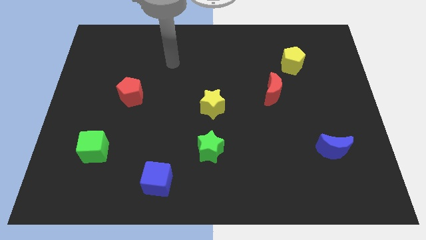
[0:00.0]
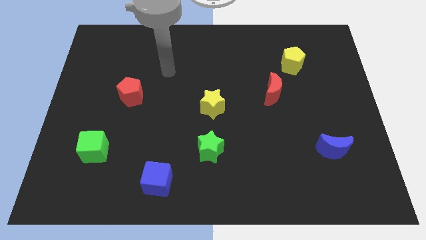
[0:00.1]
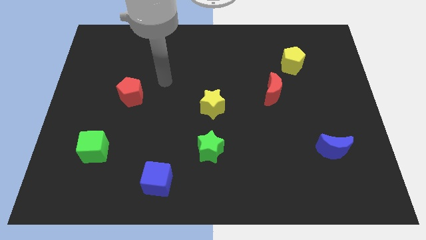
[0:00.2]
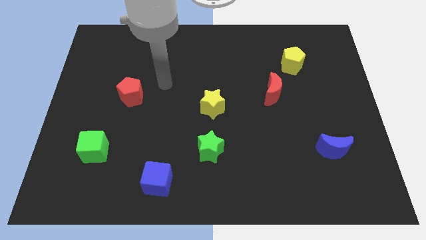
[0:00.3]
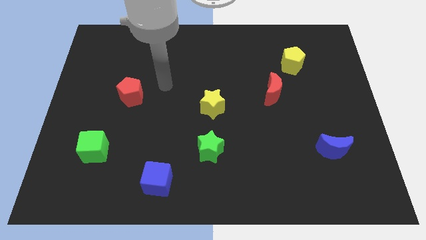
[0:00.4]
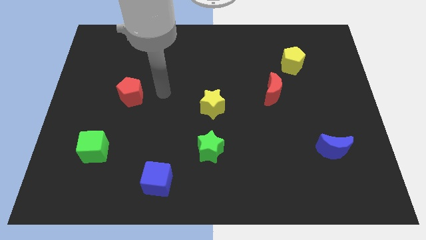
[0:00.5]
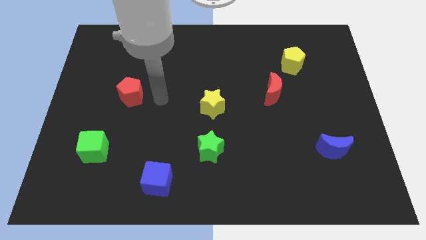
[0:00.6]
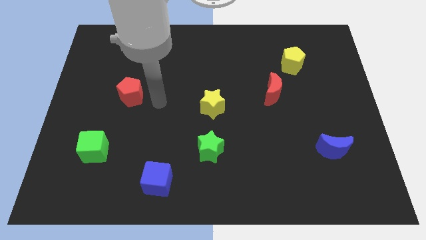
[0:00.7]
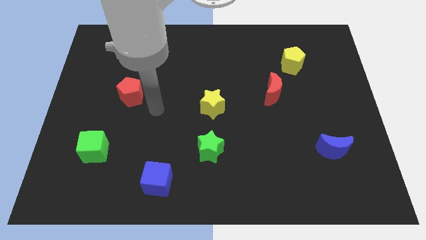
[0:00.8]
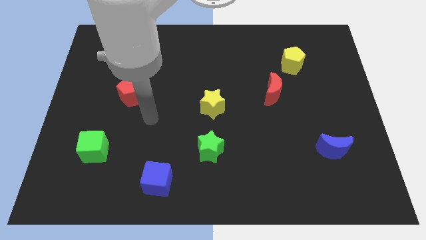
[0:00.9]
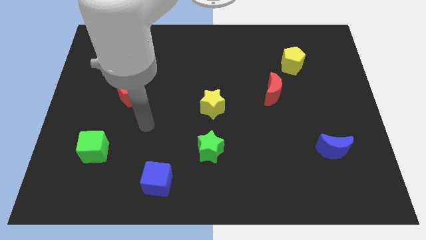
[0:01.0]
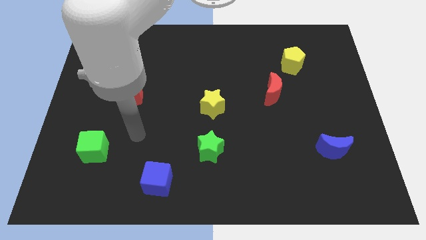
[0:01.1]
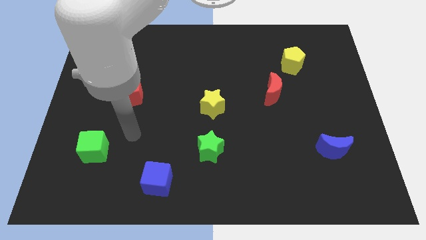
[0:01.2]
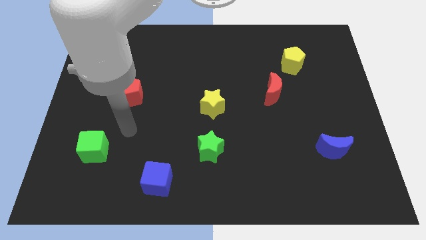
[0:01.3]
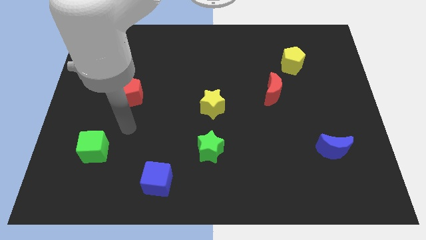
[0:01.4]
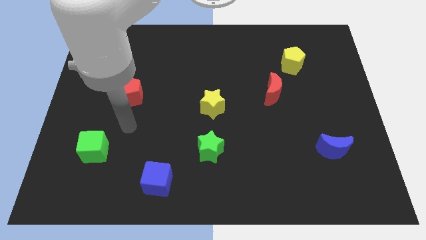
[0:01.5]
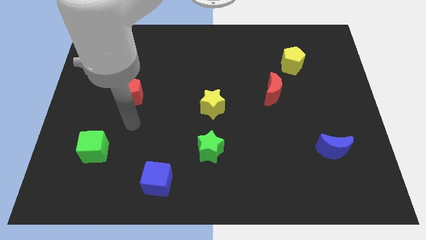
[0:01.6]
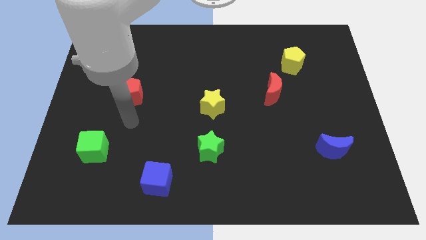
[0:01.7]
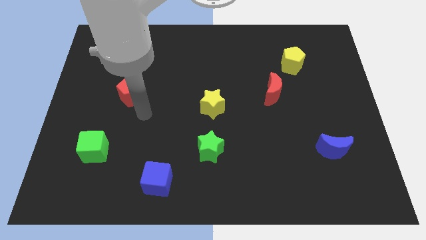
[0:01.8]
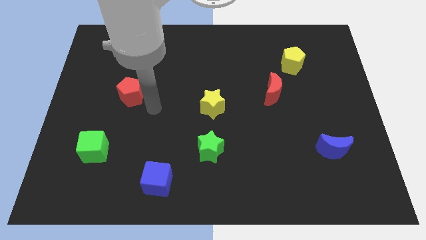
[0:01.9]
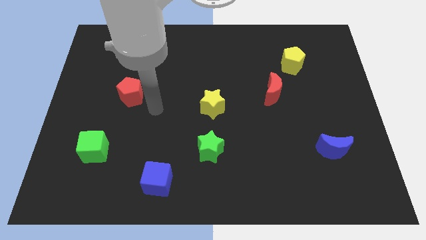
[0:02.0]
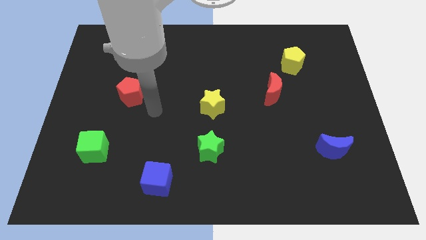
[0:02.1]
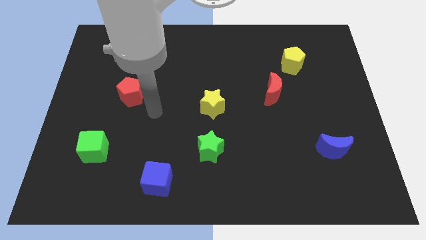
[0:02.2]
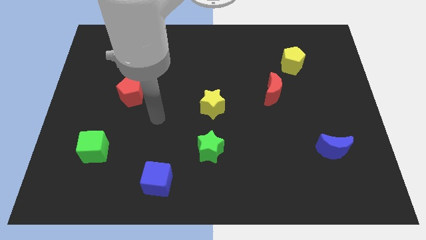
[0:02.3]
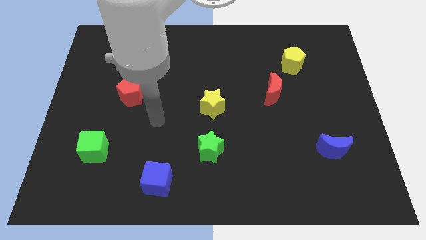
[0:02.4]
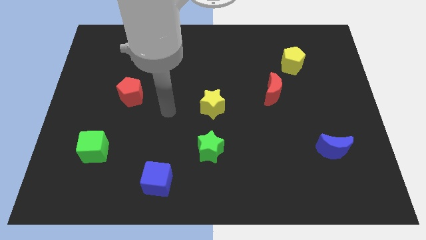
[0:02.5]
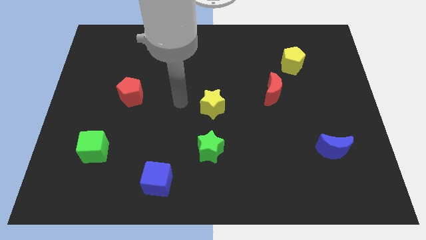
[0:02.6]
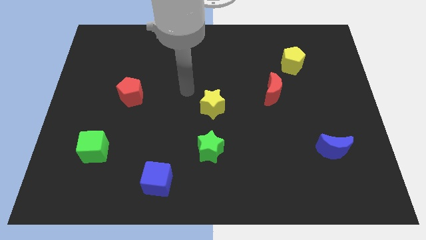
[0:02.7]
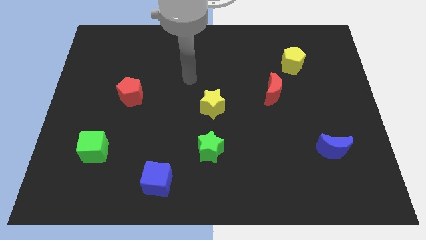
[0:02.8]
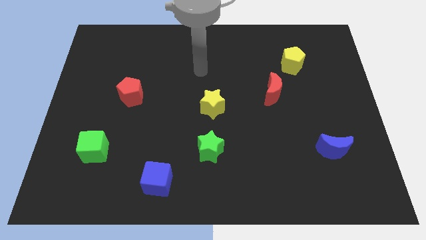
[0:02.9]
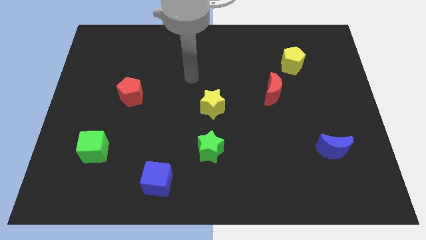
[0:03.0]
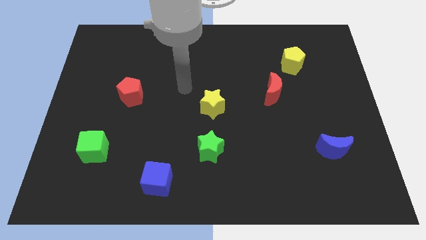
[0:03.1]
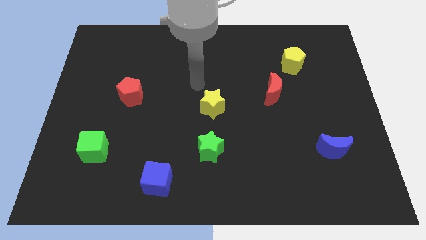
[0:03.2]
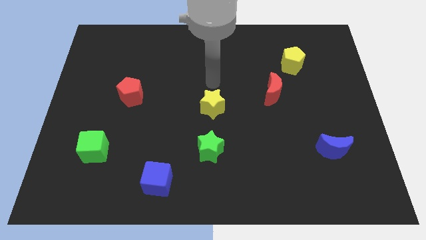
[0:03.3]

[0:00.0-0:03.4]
move your arm to the top side of the yellow star

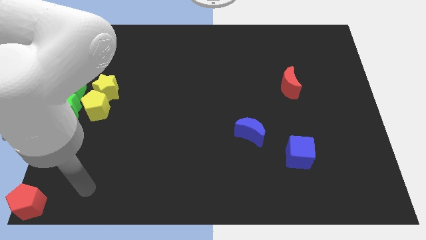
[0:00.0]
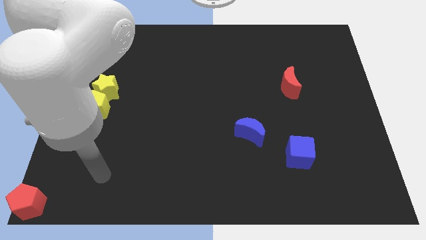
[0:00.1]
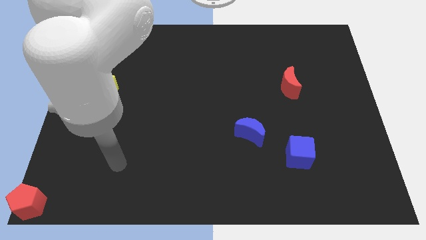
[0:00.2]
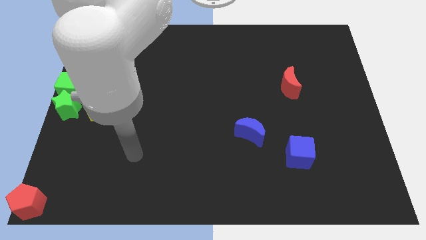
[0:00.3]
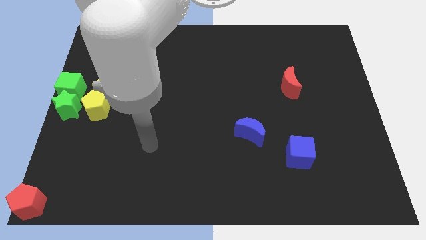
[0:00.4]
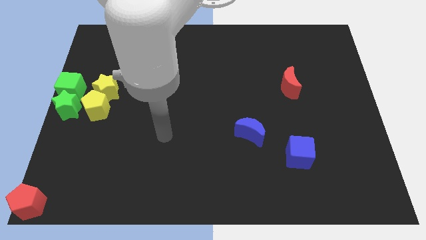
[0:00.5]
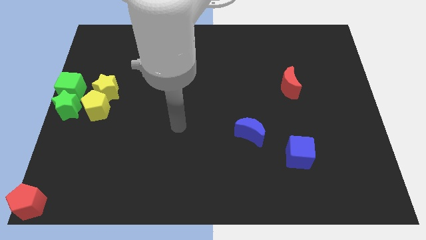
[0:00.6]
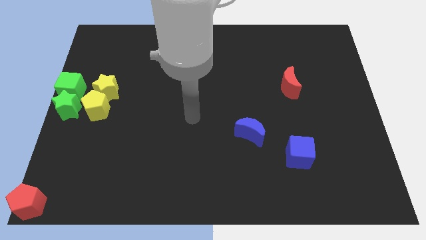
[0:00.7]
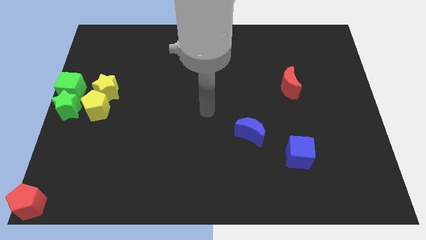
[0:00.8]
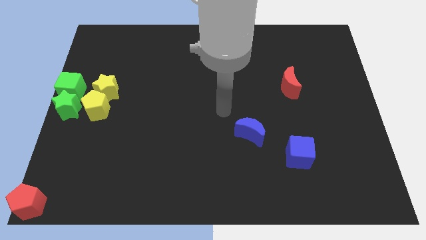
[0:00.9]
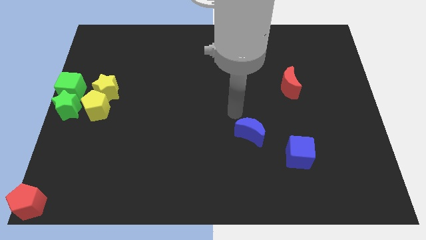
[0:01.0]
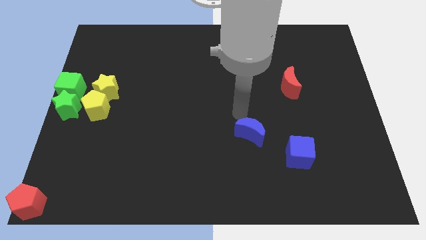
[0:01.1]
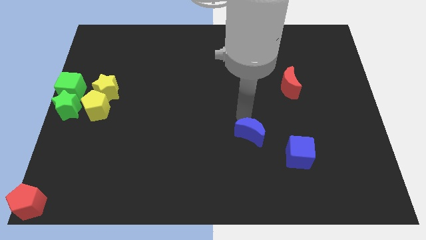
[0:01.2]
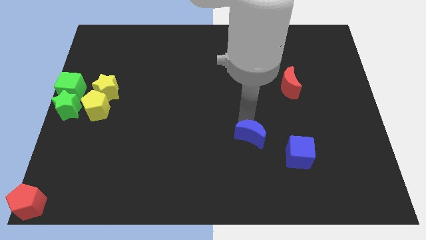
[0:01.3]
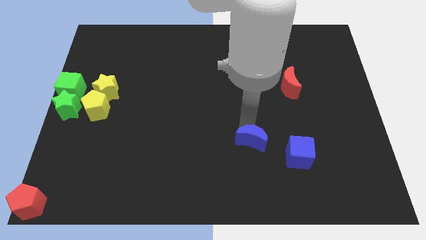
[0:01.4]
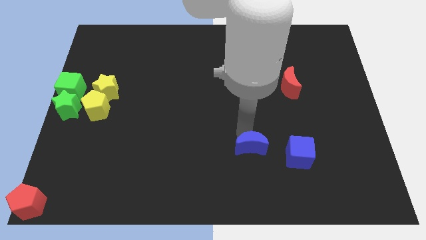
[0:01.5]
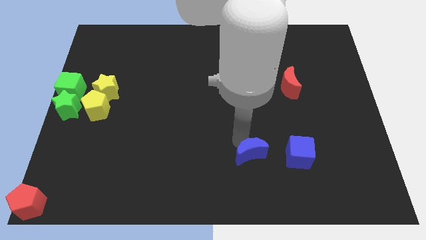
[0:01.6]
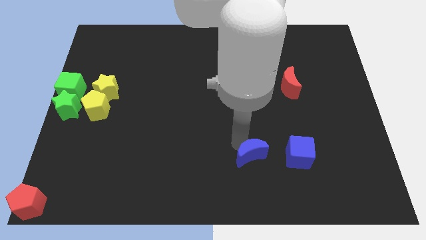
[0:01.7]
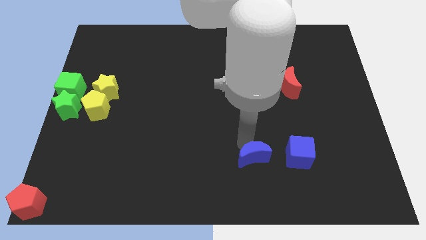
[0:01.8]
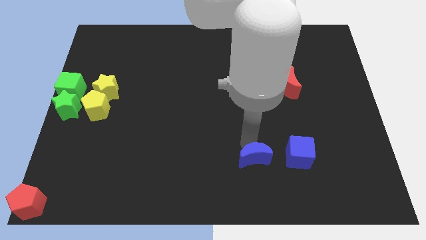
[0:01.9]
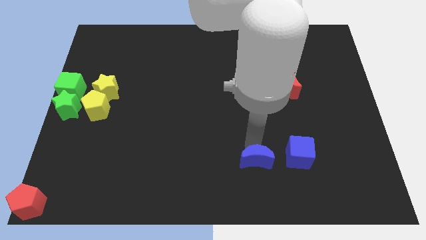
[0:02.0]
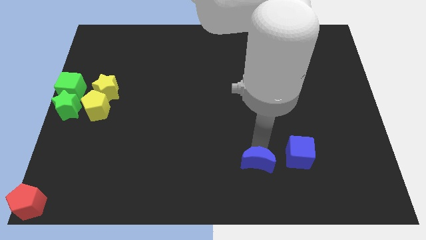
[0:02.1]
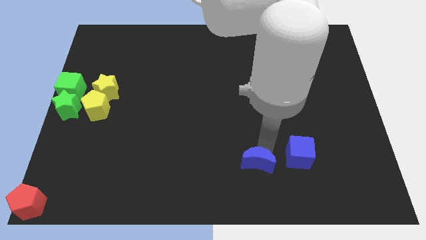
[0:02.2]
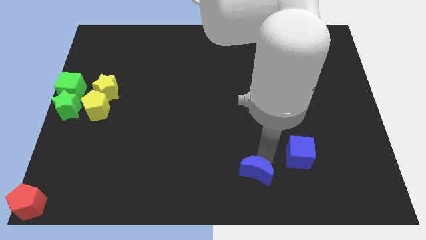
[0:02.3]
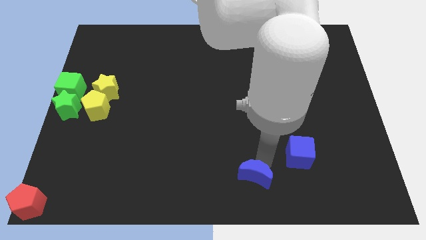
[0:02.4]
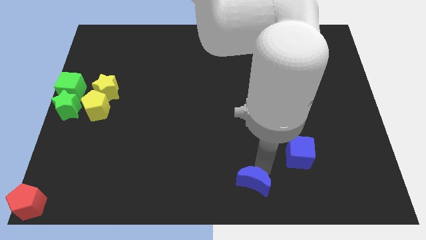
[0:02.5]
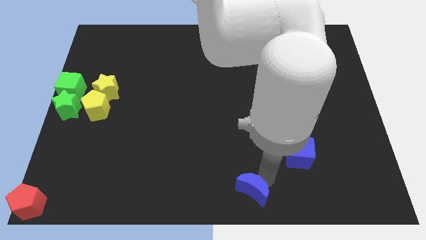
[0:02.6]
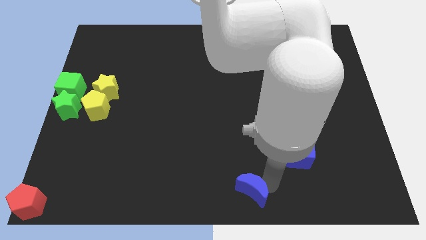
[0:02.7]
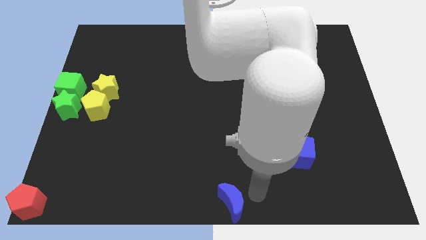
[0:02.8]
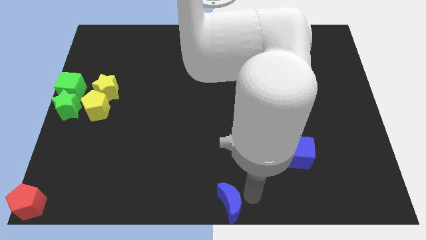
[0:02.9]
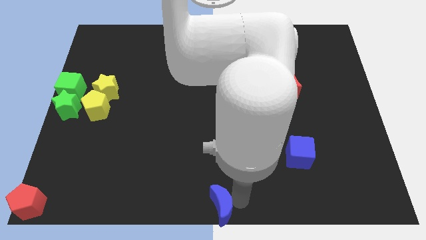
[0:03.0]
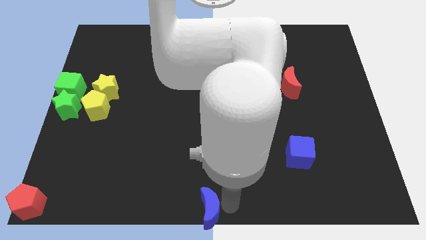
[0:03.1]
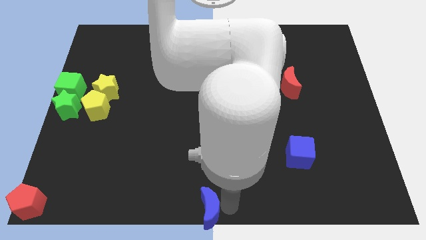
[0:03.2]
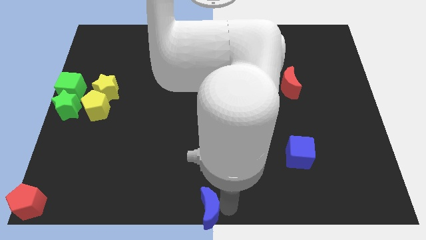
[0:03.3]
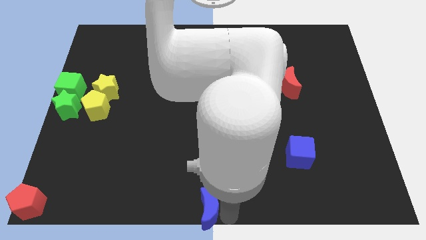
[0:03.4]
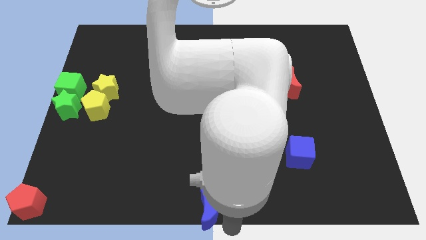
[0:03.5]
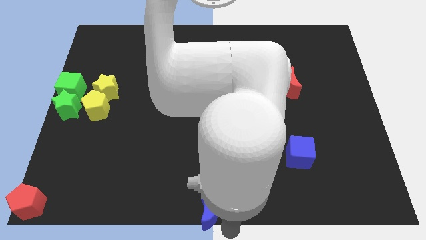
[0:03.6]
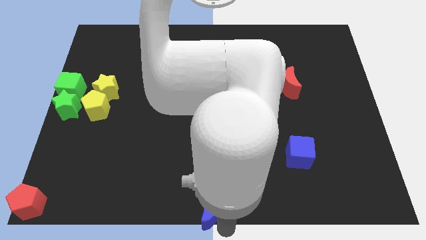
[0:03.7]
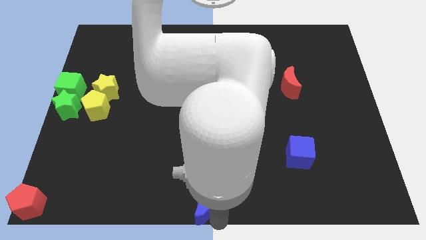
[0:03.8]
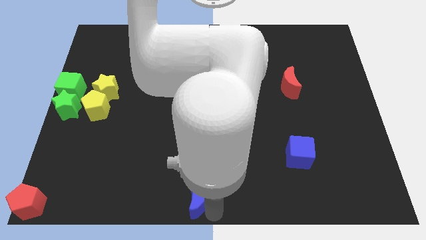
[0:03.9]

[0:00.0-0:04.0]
move the blue moon to the bottom center of the board

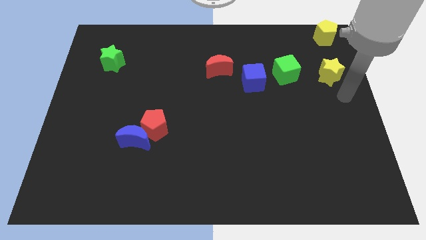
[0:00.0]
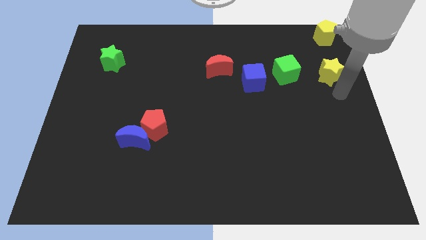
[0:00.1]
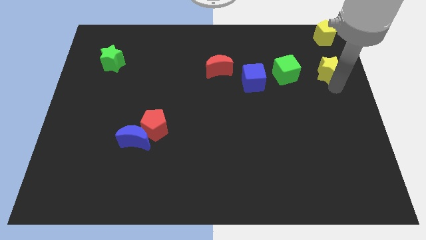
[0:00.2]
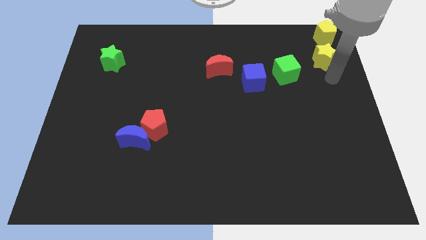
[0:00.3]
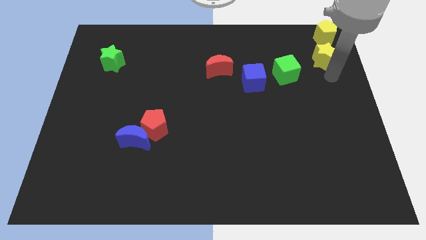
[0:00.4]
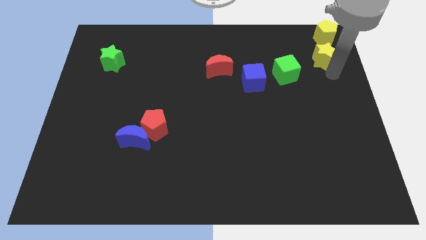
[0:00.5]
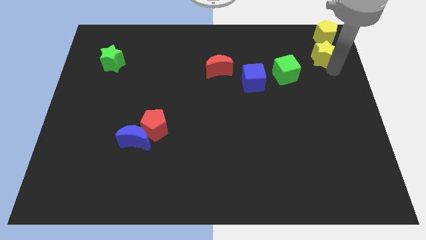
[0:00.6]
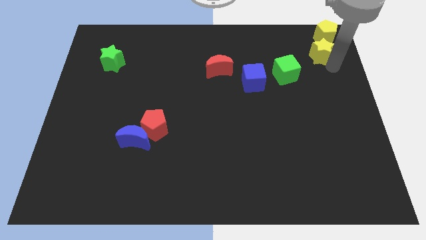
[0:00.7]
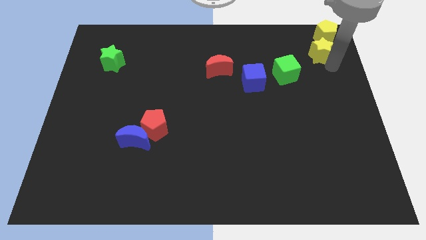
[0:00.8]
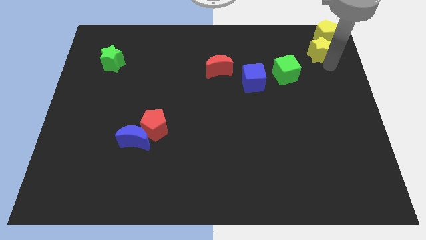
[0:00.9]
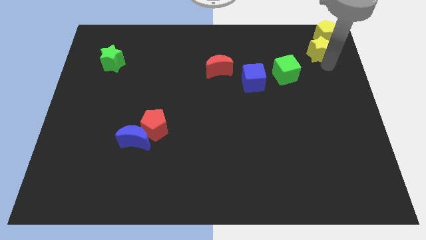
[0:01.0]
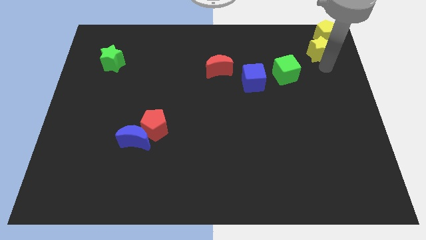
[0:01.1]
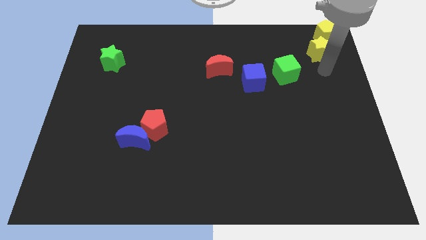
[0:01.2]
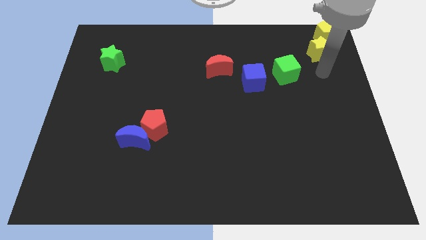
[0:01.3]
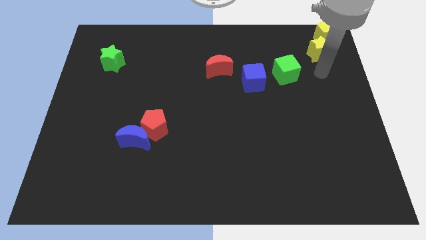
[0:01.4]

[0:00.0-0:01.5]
slide the yellow star into the yellow pentagon
